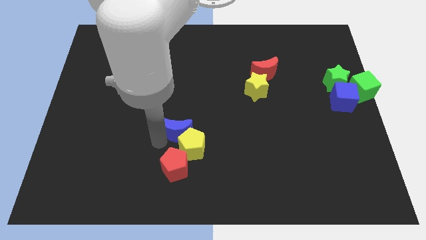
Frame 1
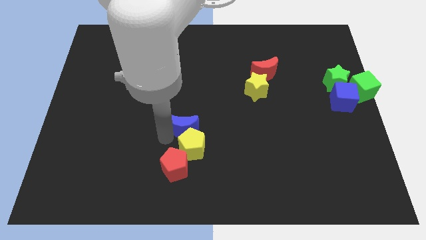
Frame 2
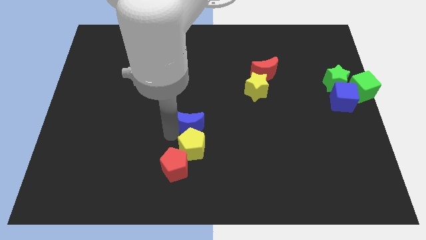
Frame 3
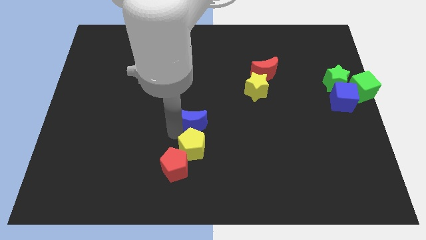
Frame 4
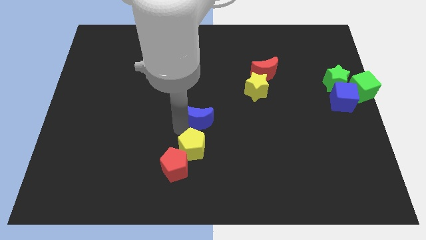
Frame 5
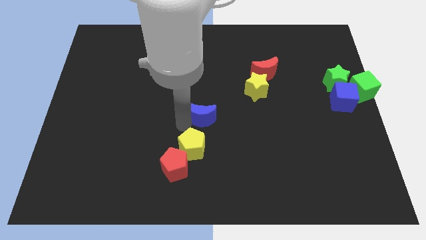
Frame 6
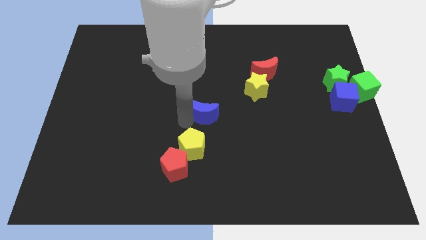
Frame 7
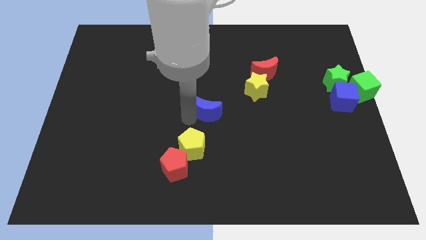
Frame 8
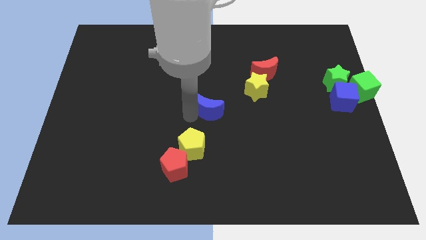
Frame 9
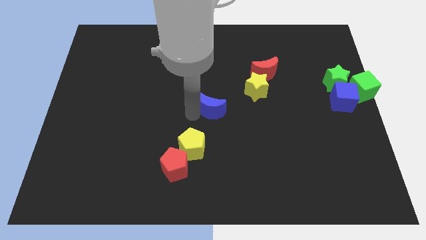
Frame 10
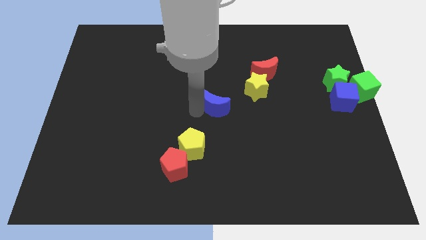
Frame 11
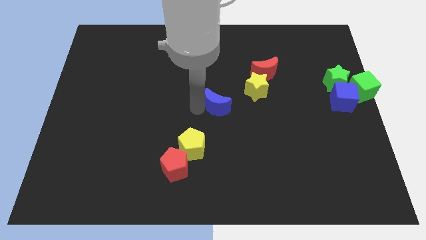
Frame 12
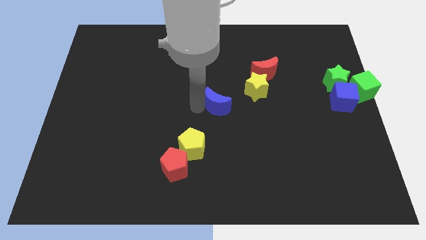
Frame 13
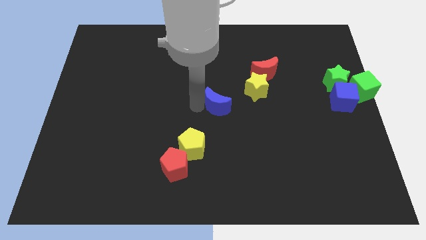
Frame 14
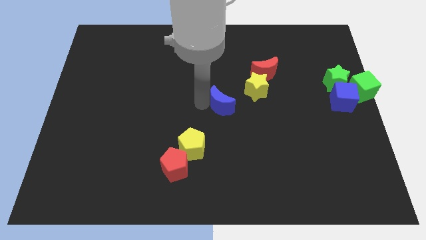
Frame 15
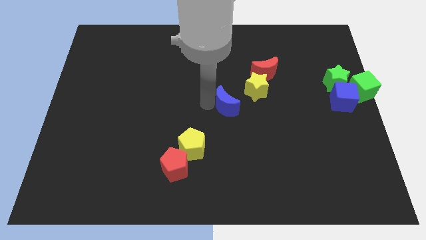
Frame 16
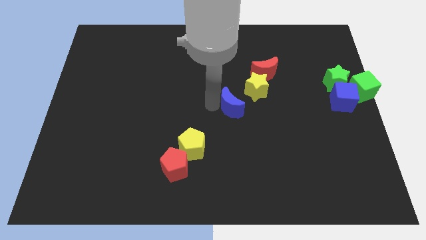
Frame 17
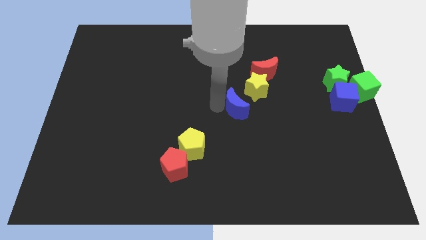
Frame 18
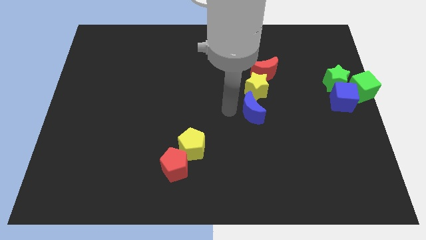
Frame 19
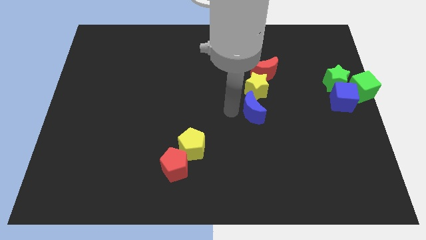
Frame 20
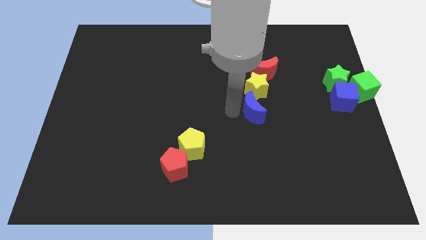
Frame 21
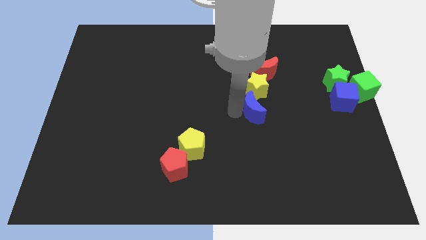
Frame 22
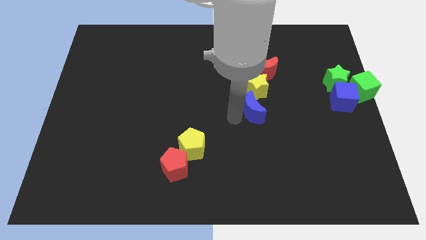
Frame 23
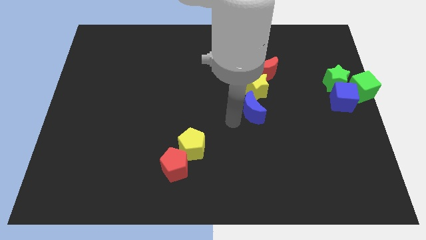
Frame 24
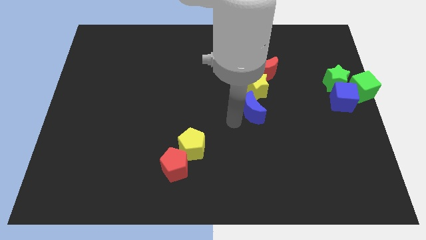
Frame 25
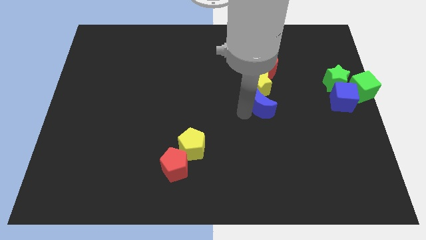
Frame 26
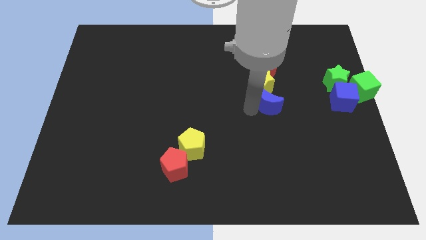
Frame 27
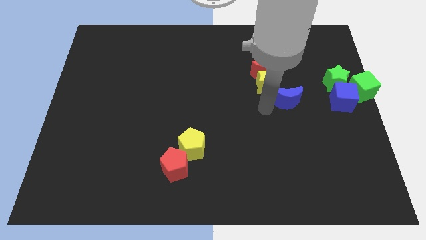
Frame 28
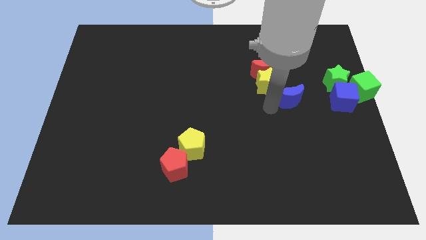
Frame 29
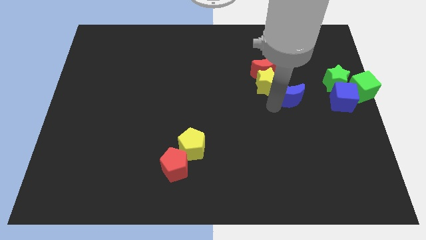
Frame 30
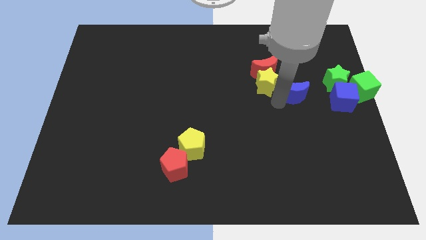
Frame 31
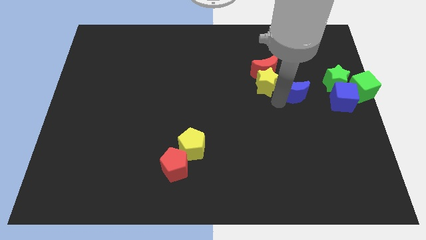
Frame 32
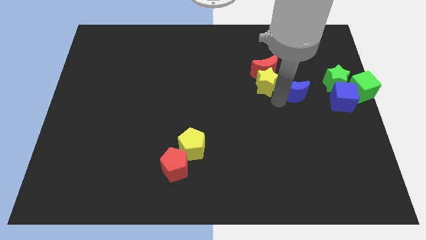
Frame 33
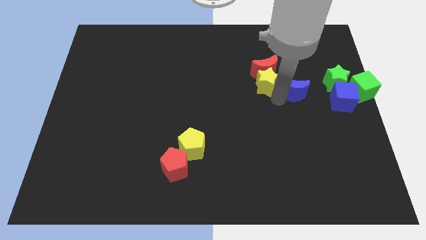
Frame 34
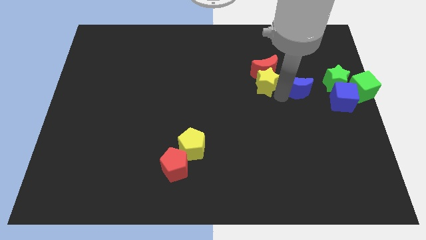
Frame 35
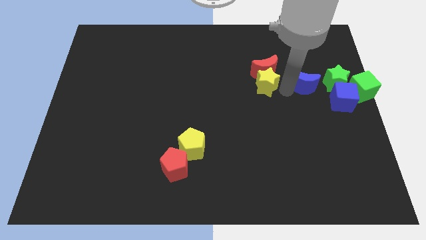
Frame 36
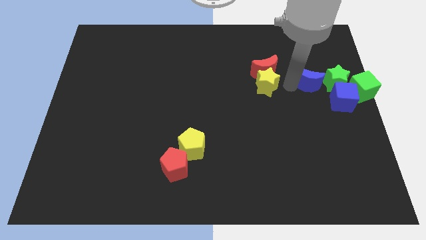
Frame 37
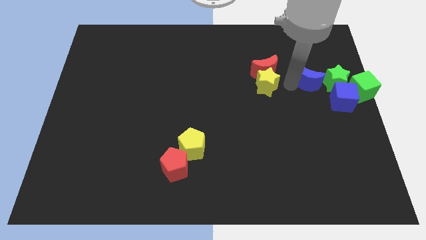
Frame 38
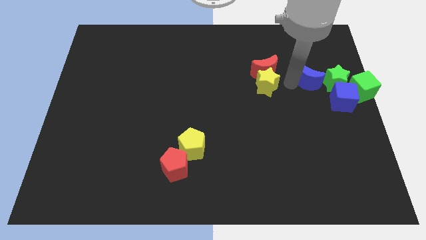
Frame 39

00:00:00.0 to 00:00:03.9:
place the blue moon in between the green star and yellow star

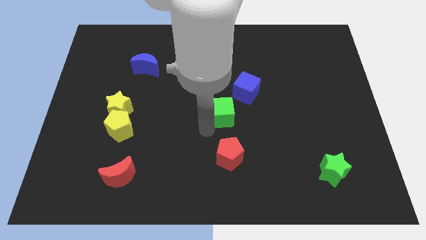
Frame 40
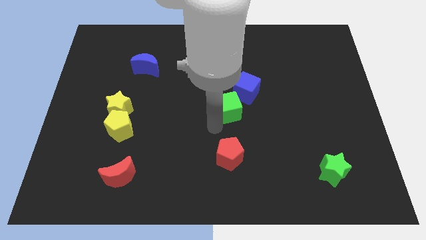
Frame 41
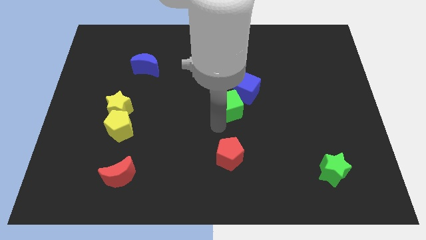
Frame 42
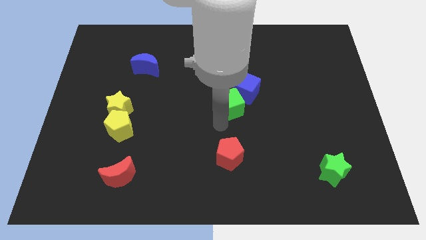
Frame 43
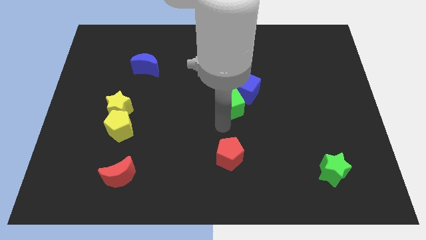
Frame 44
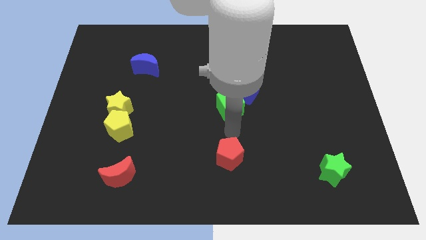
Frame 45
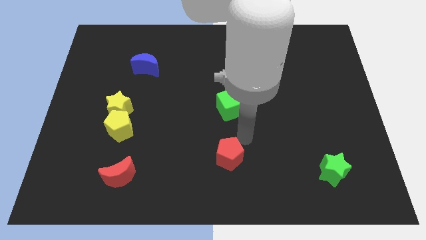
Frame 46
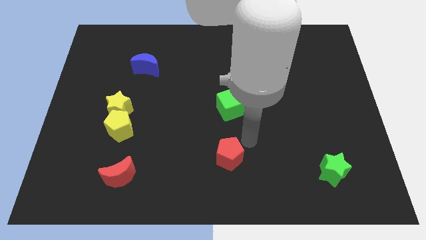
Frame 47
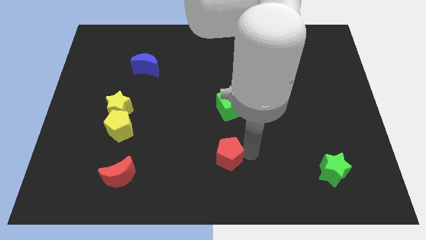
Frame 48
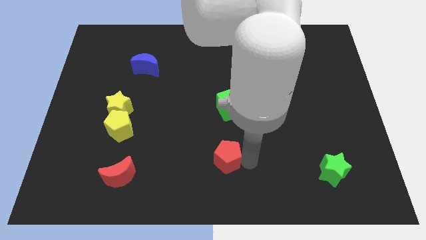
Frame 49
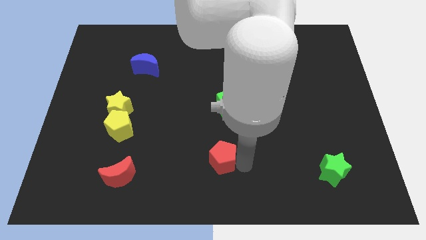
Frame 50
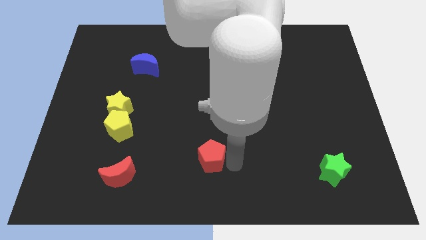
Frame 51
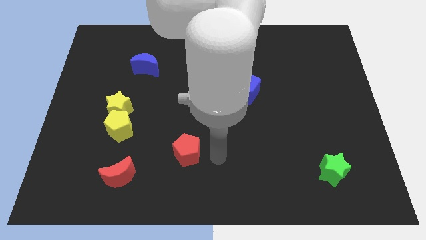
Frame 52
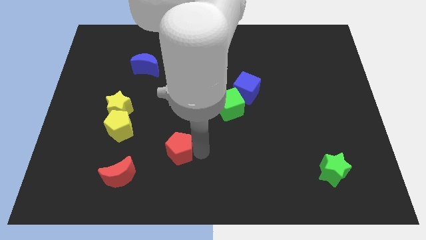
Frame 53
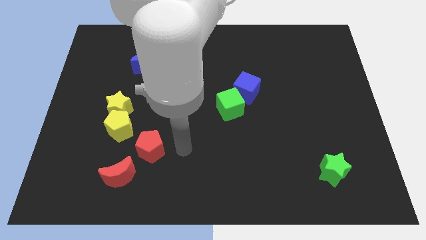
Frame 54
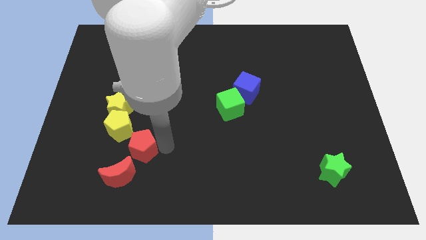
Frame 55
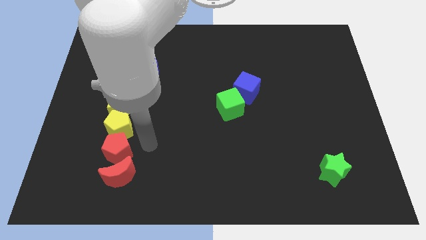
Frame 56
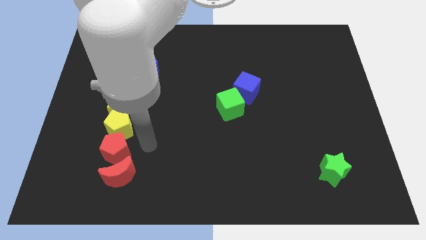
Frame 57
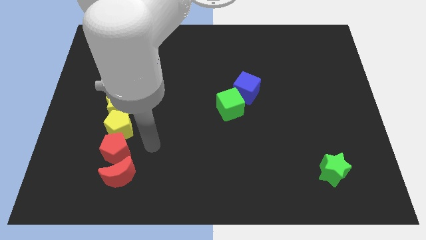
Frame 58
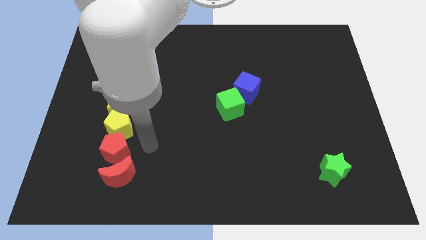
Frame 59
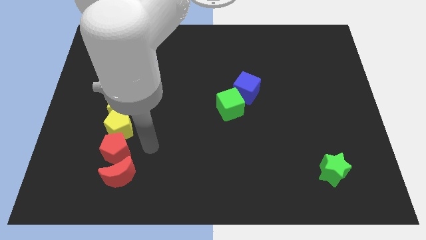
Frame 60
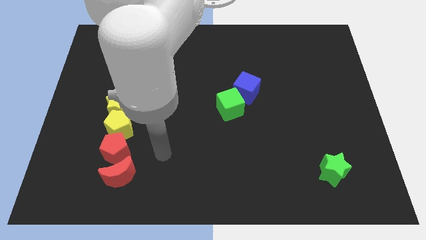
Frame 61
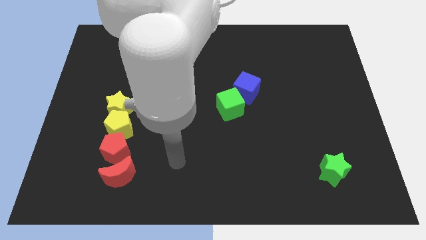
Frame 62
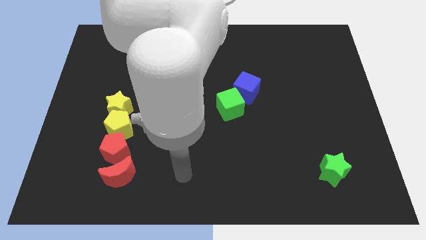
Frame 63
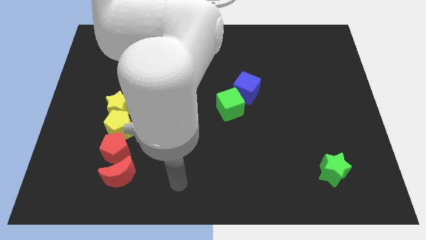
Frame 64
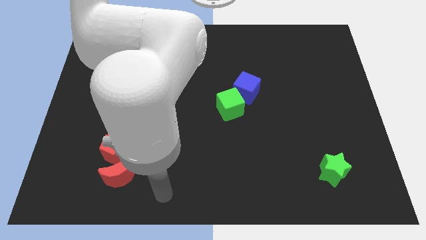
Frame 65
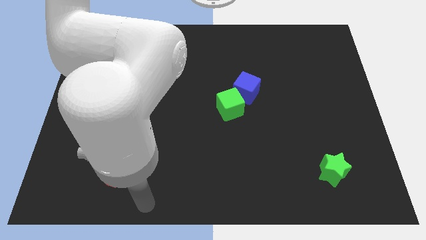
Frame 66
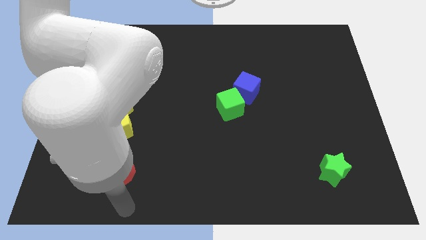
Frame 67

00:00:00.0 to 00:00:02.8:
place the red pentagon in between the red moon and yellow pentagon

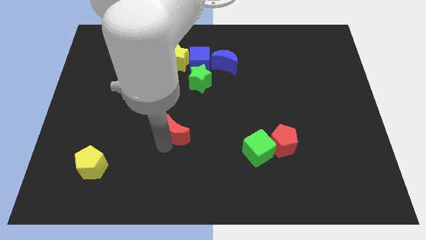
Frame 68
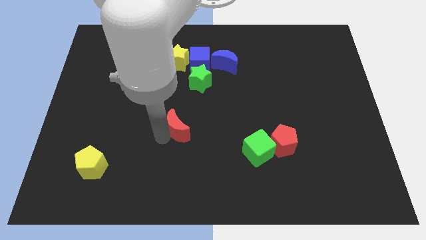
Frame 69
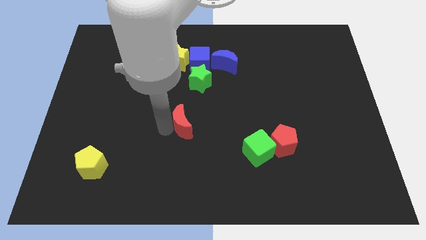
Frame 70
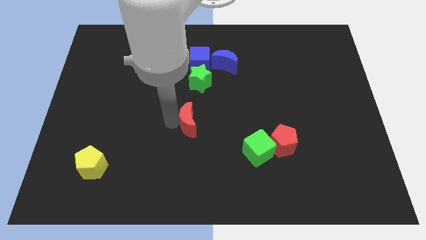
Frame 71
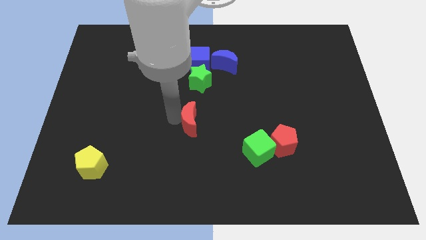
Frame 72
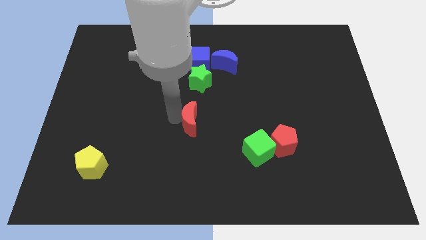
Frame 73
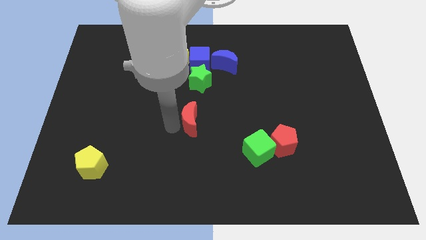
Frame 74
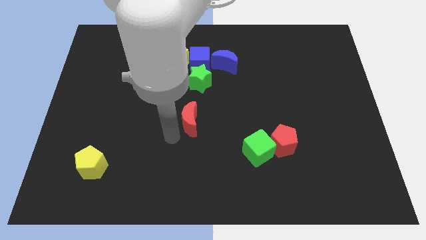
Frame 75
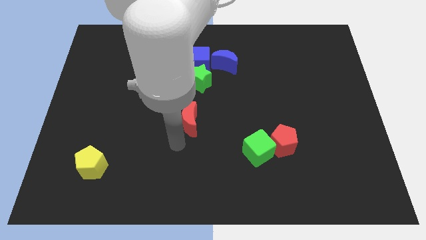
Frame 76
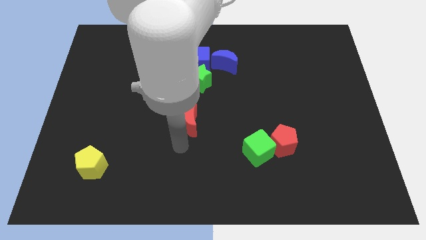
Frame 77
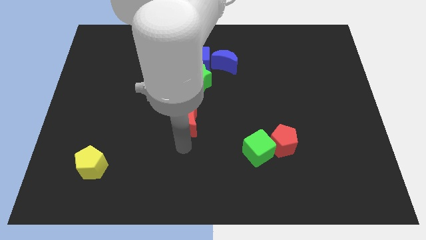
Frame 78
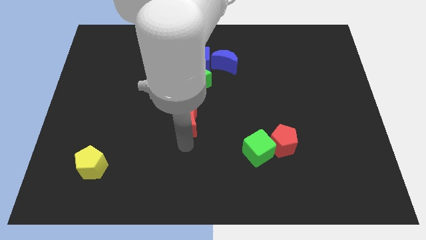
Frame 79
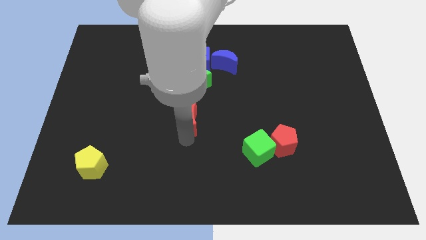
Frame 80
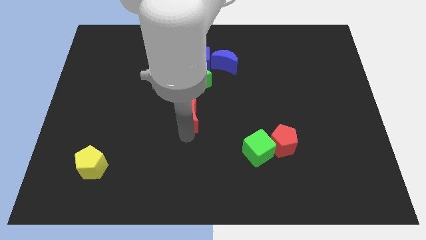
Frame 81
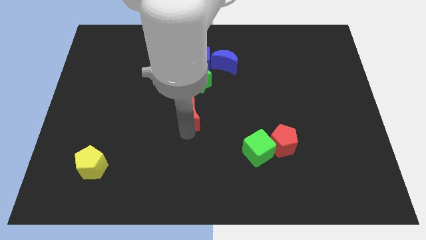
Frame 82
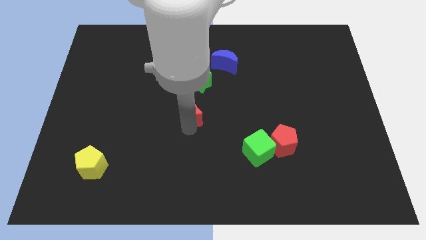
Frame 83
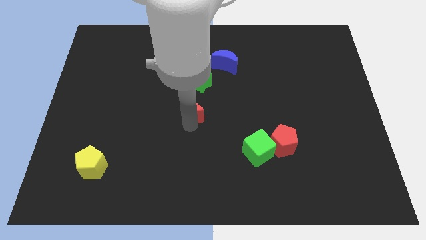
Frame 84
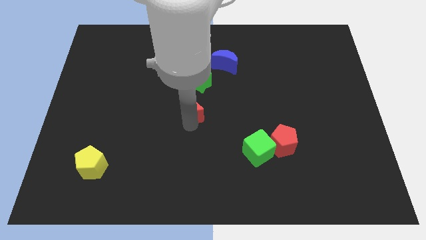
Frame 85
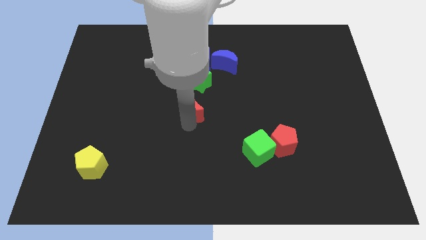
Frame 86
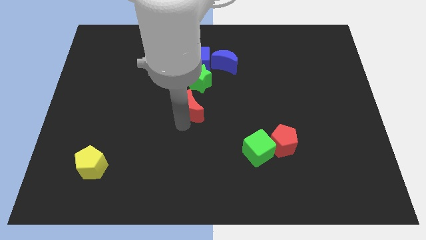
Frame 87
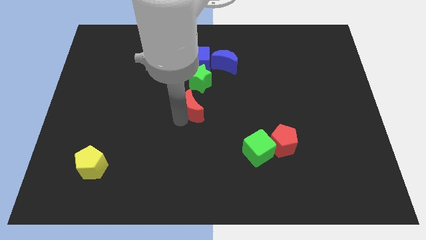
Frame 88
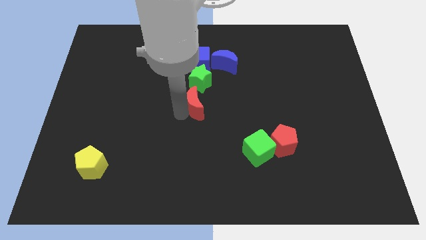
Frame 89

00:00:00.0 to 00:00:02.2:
move red crescent vertically below the green star
